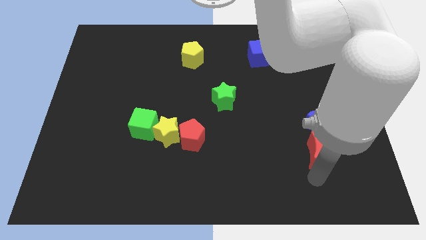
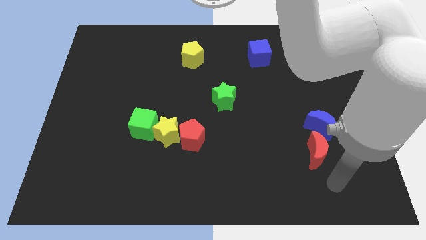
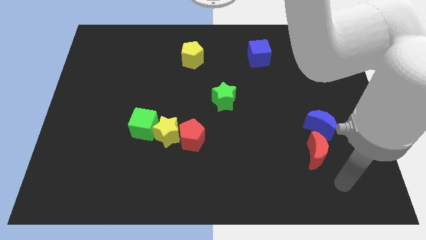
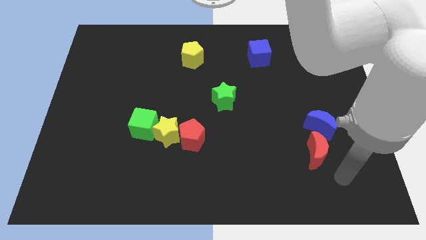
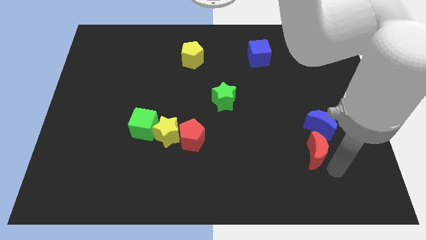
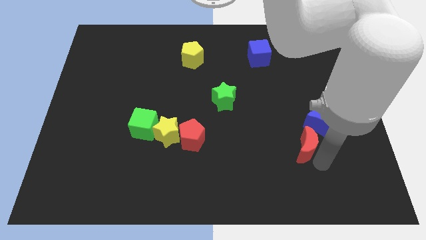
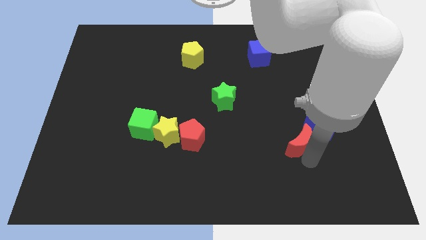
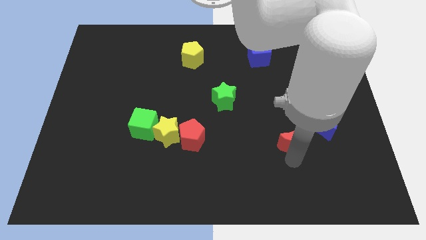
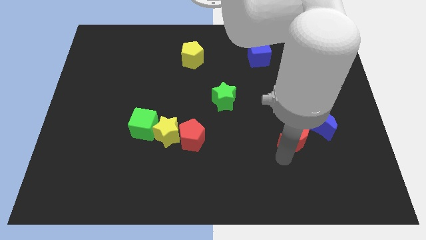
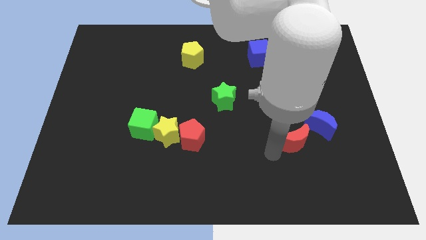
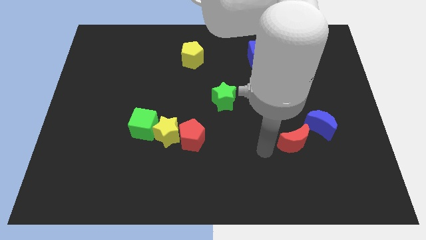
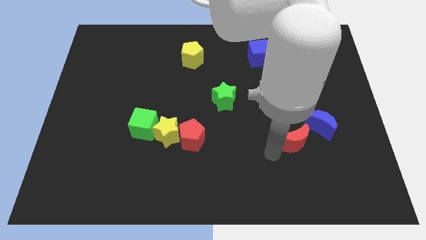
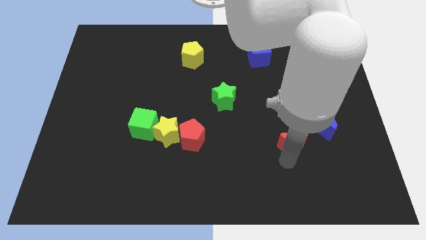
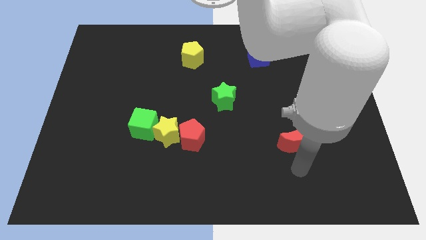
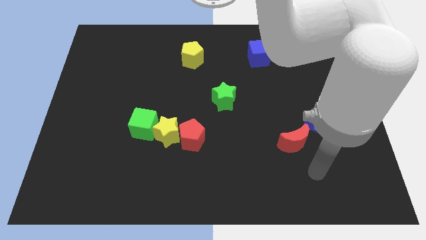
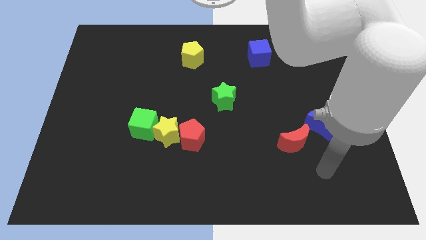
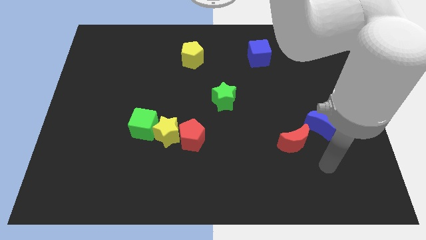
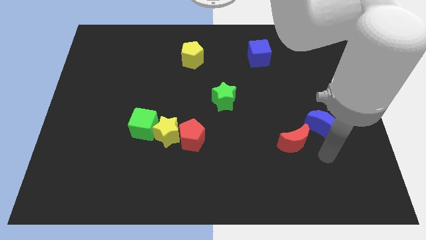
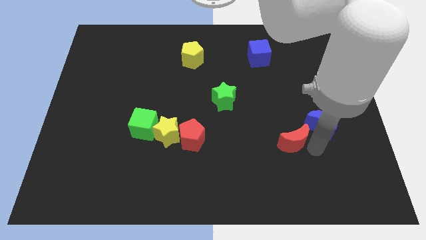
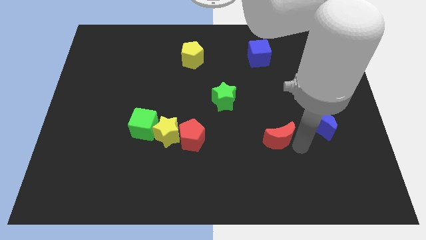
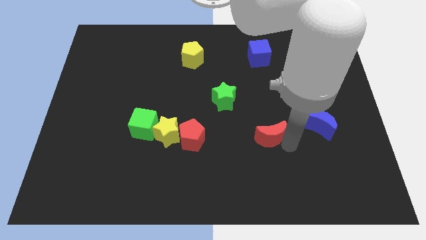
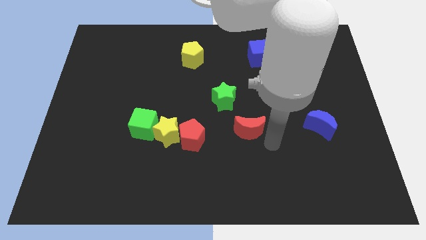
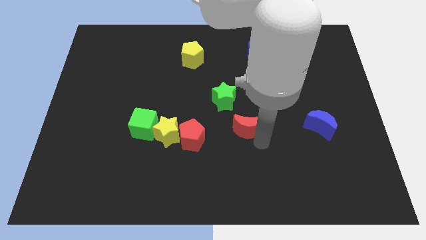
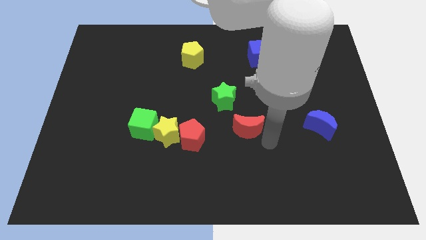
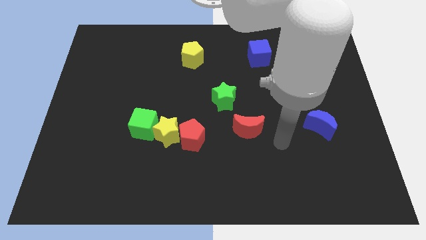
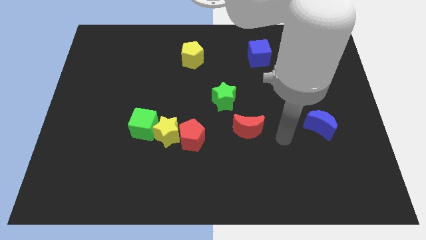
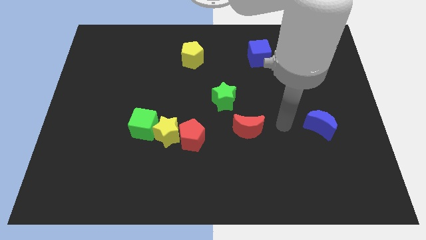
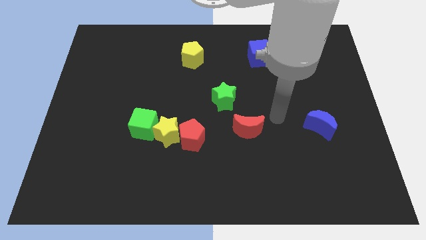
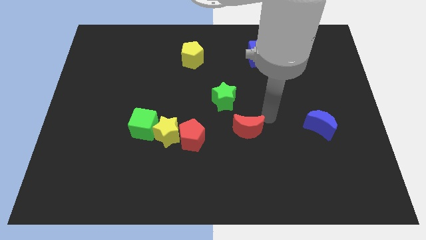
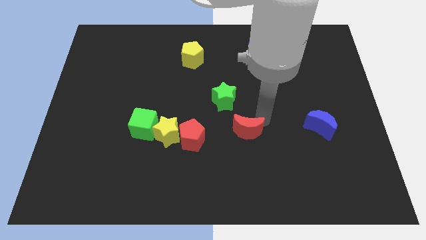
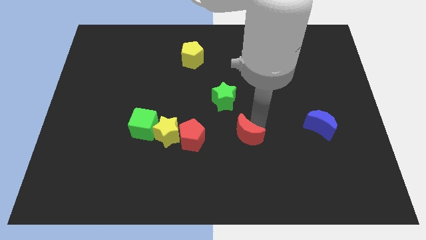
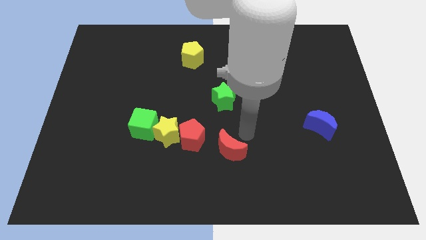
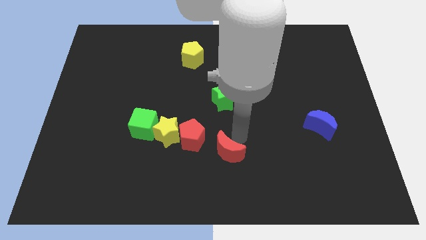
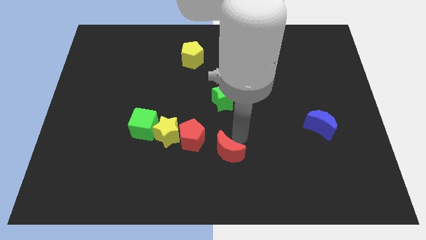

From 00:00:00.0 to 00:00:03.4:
separate red crescent from the blue crescent

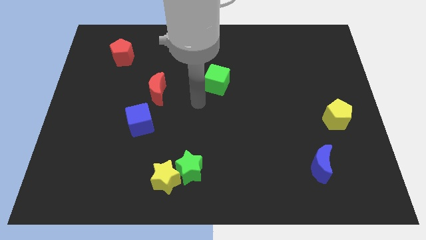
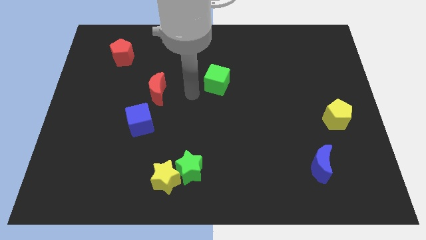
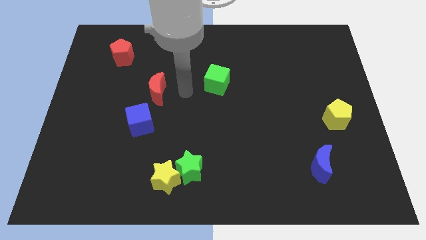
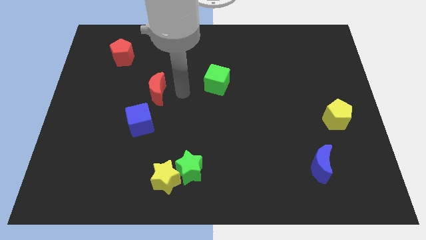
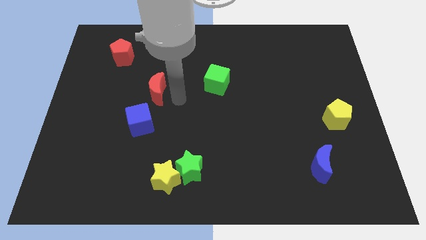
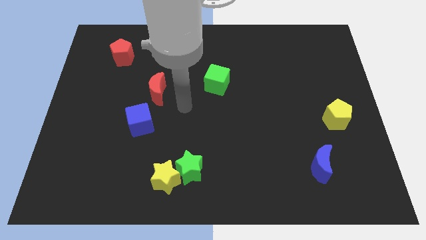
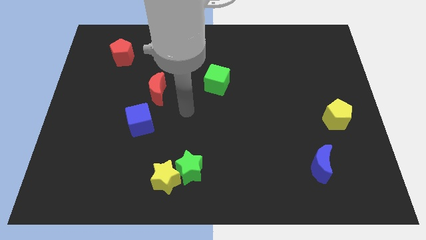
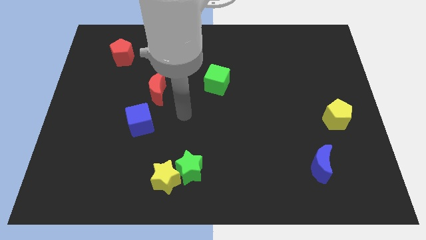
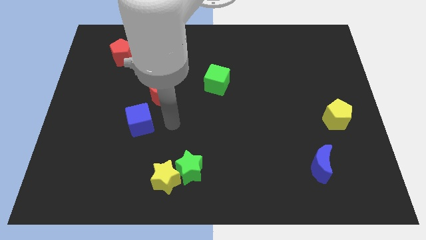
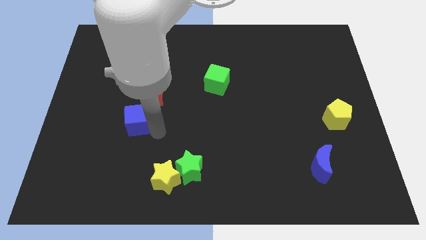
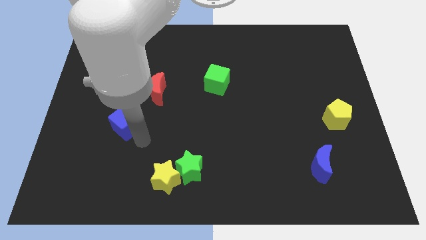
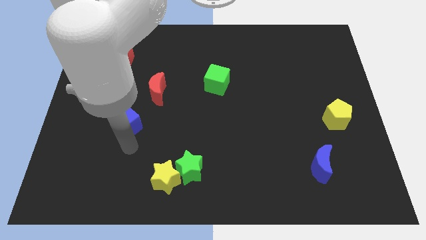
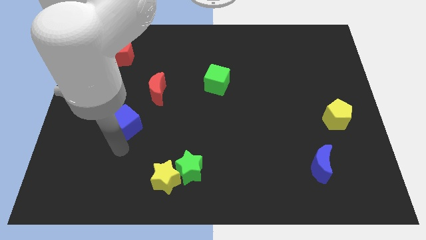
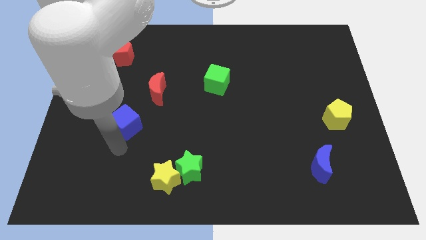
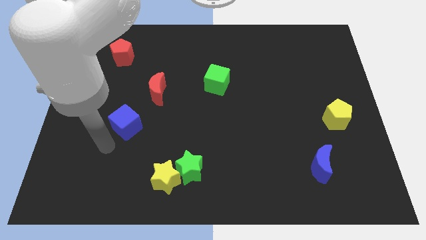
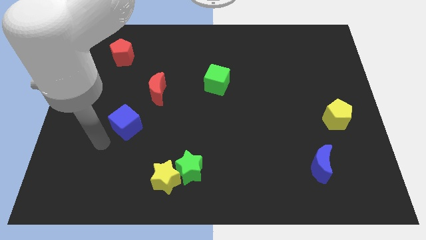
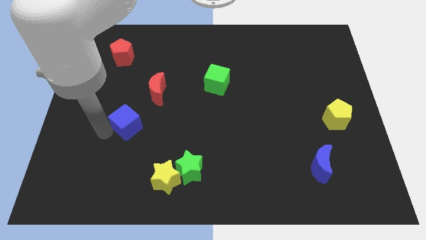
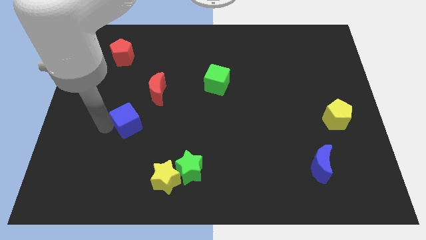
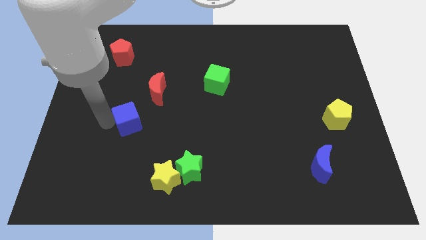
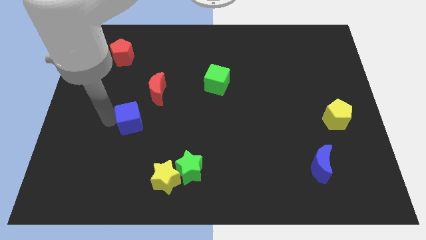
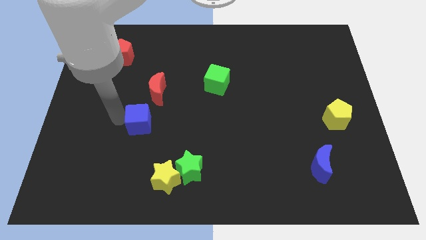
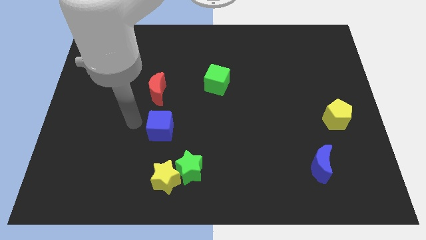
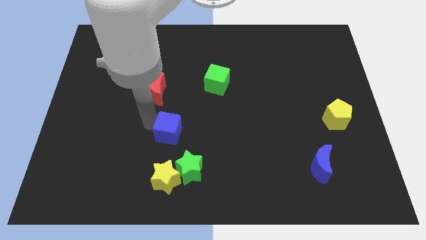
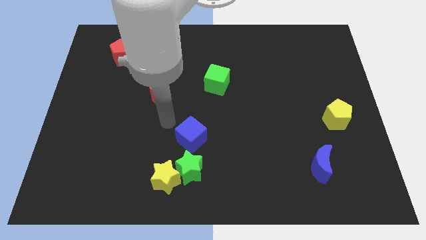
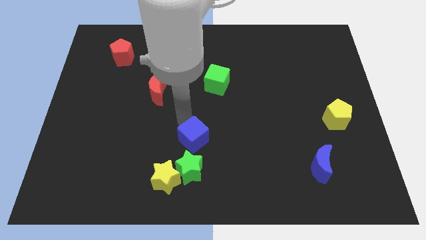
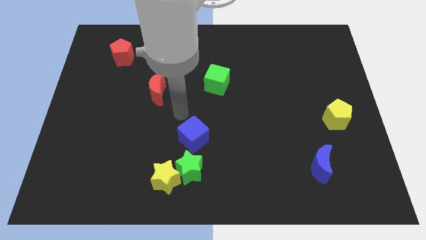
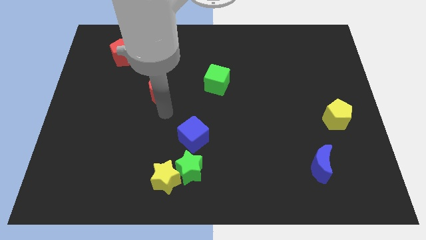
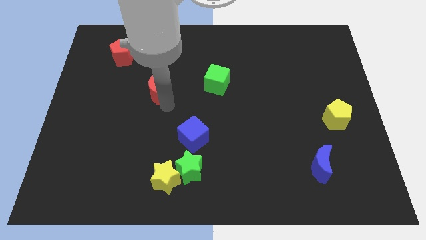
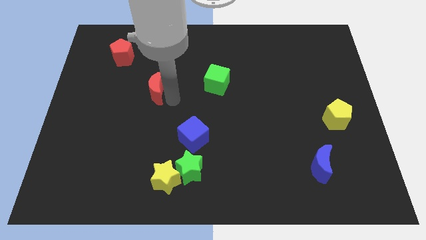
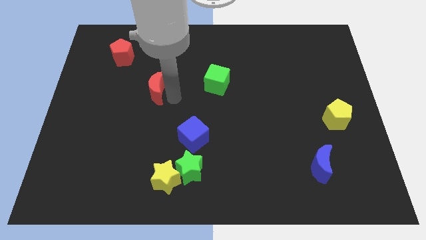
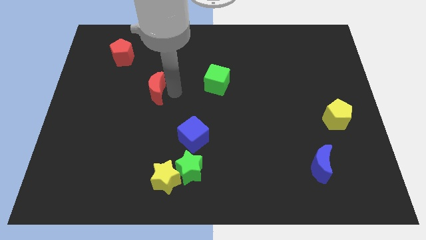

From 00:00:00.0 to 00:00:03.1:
slide blue cube on top of green star

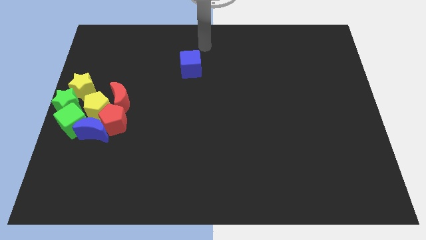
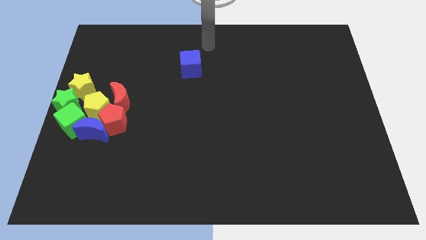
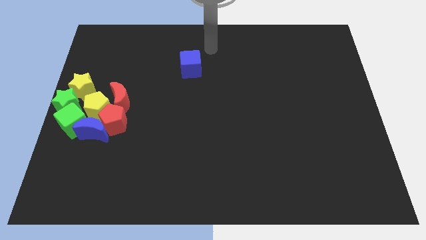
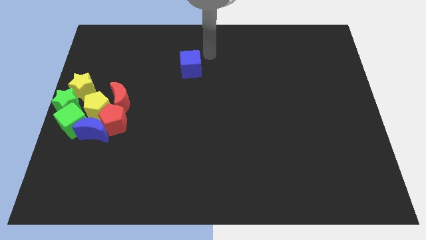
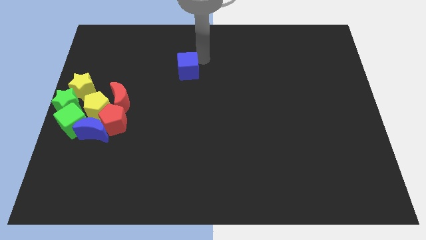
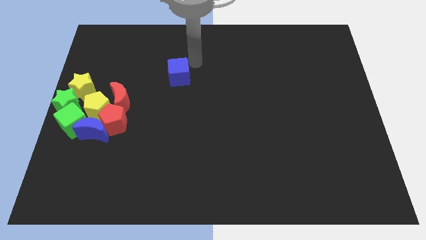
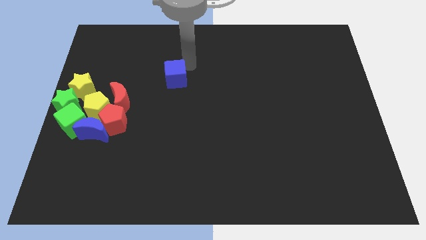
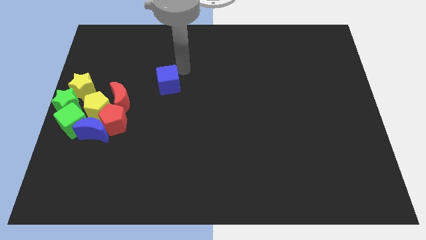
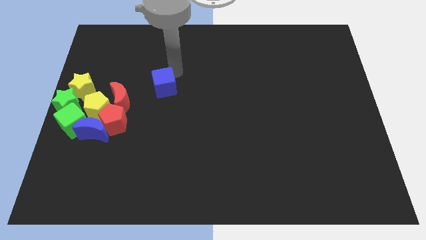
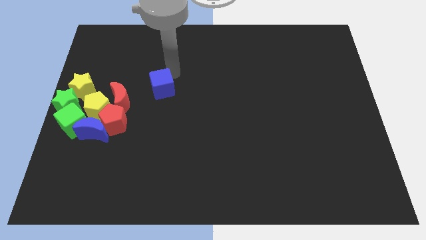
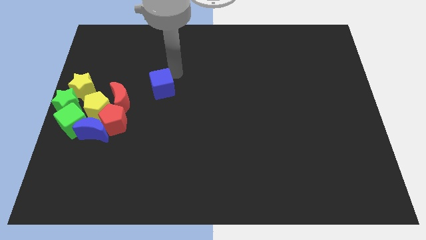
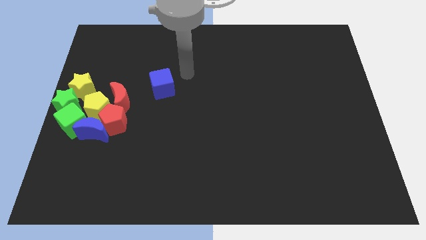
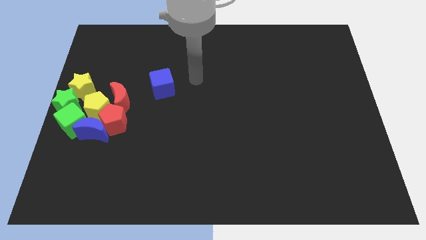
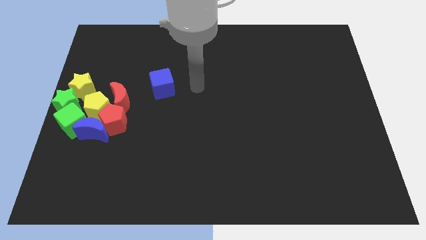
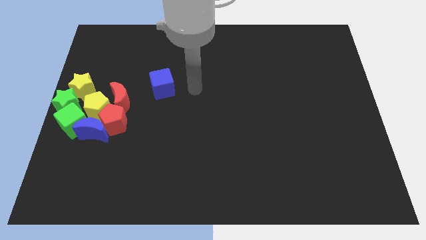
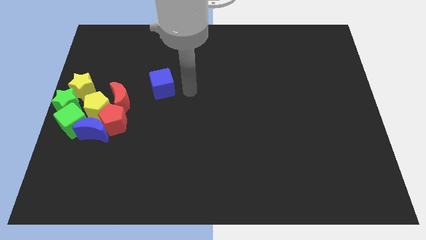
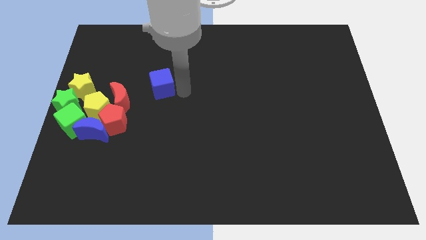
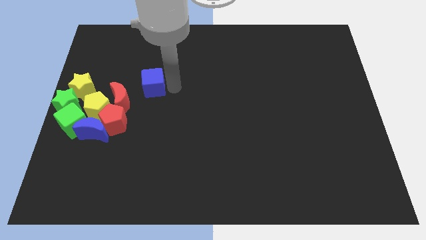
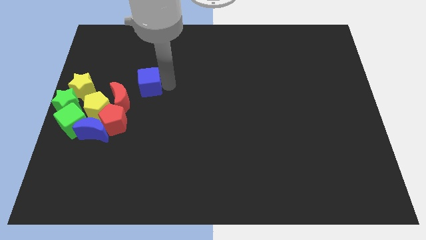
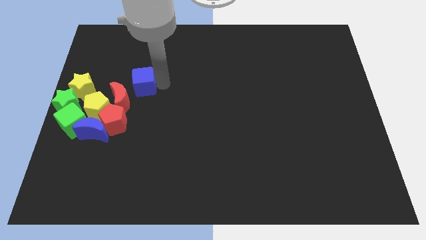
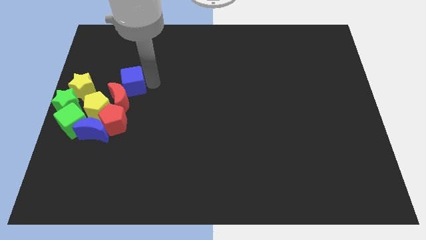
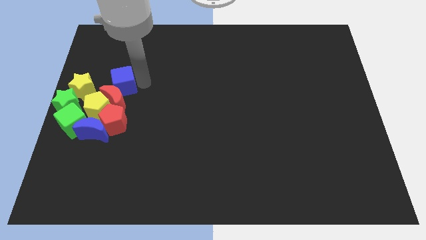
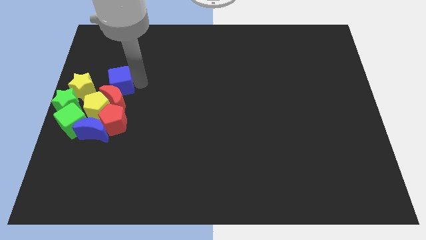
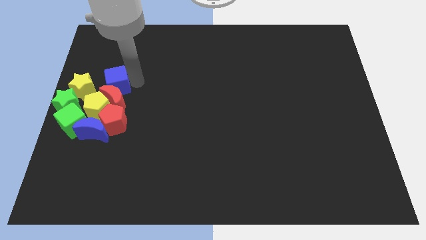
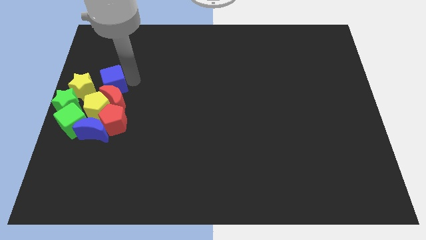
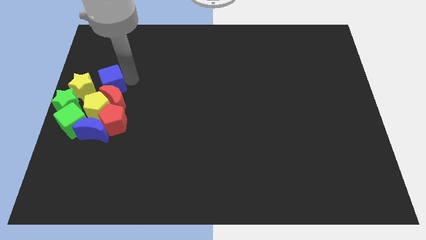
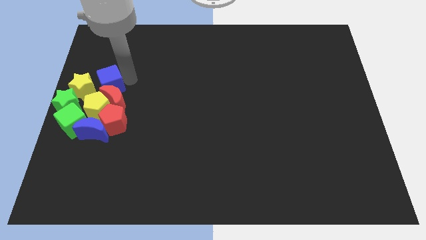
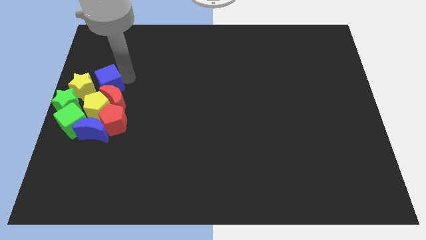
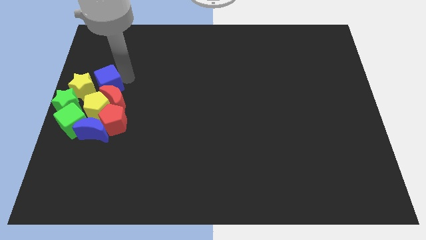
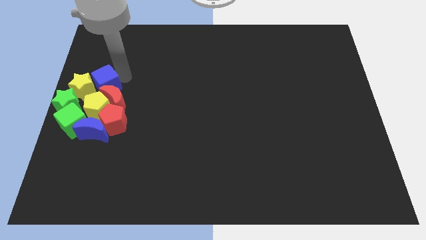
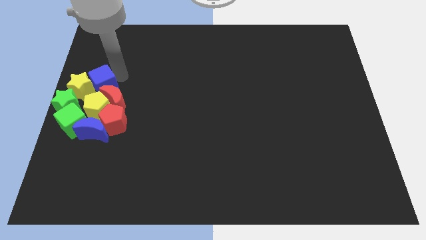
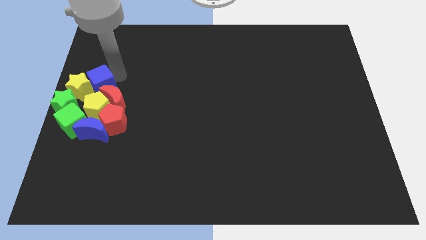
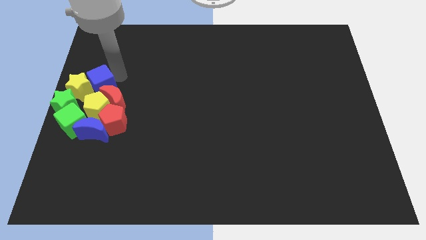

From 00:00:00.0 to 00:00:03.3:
place the blue cube right to the yellow star
